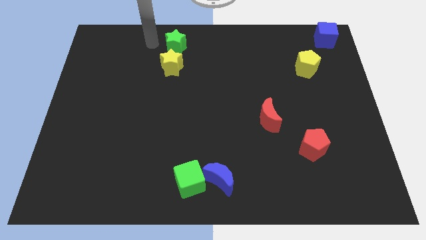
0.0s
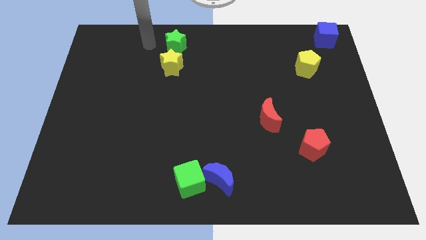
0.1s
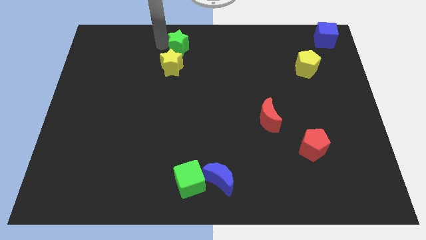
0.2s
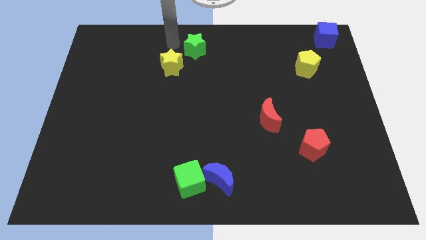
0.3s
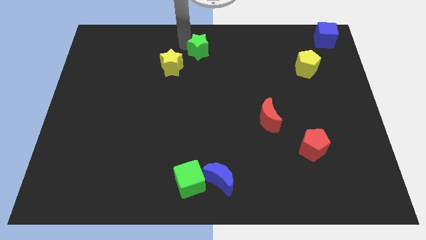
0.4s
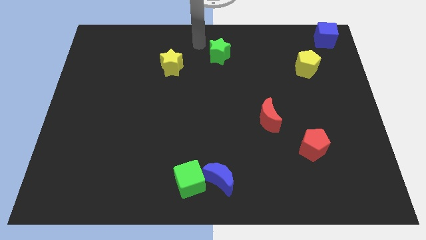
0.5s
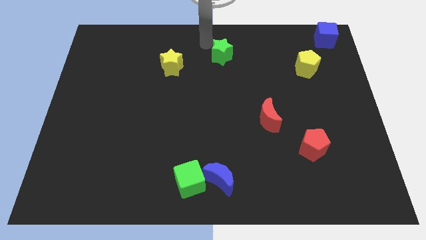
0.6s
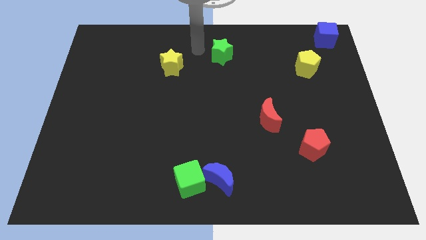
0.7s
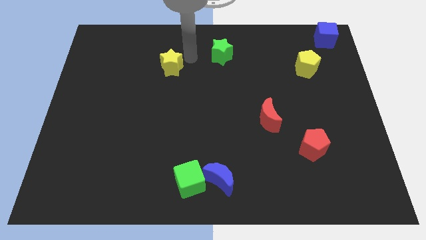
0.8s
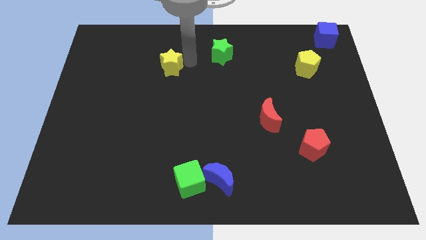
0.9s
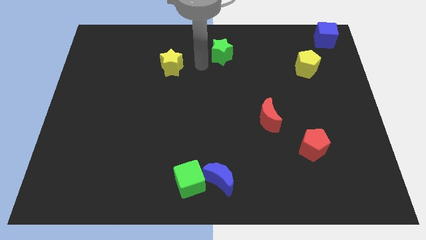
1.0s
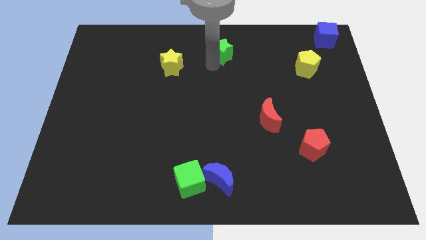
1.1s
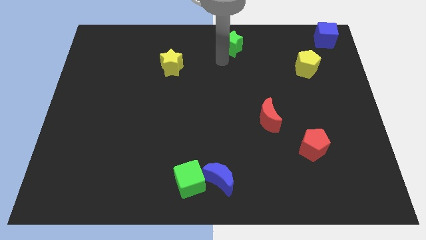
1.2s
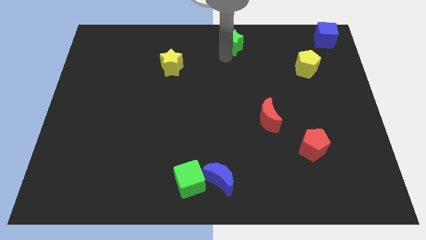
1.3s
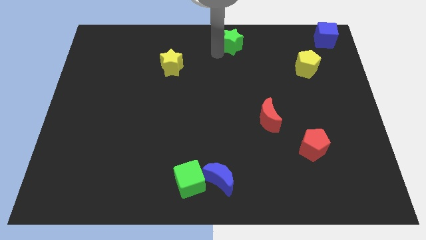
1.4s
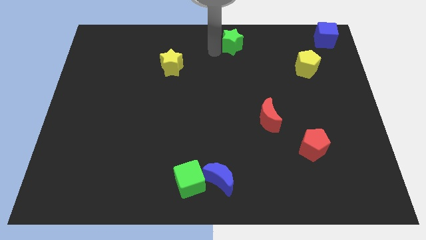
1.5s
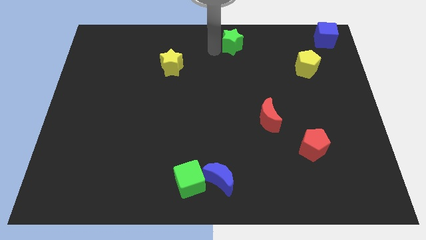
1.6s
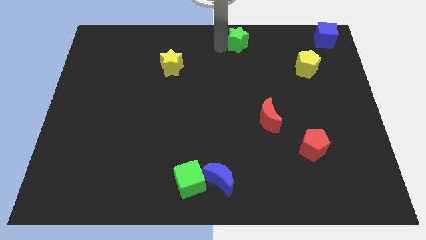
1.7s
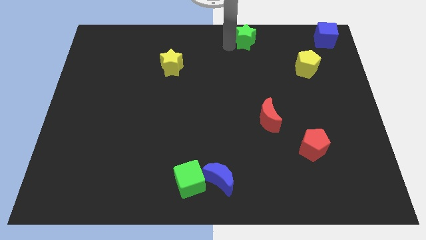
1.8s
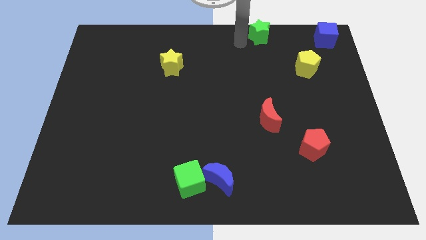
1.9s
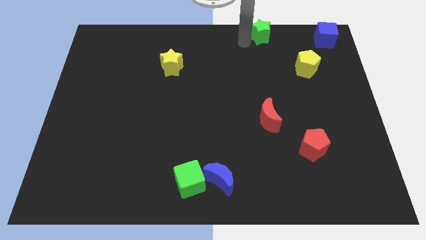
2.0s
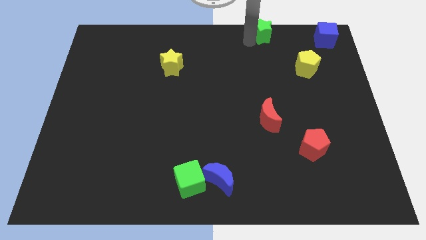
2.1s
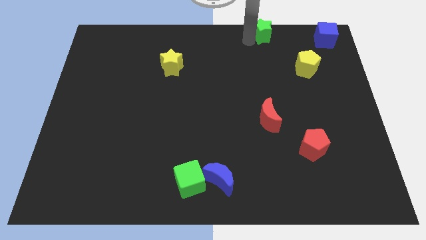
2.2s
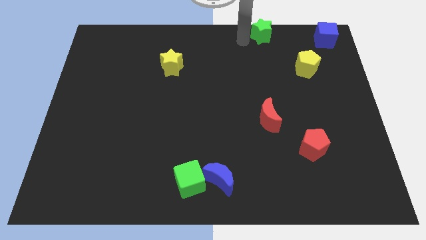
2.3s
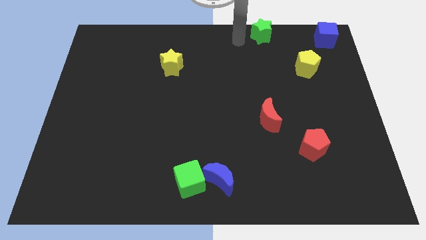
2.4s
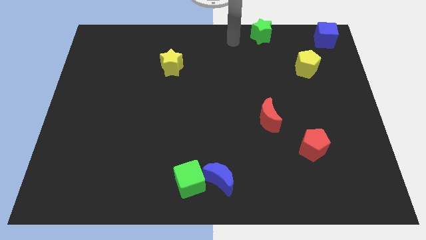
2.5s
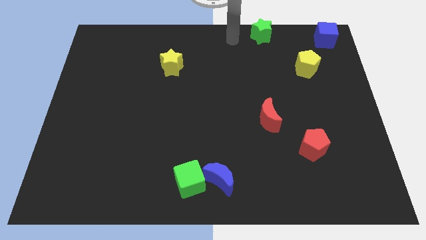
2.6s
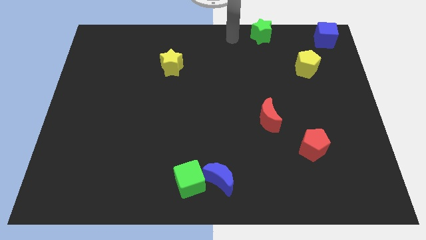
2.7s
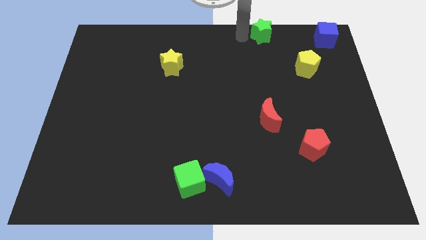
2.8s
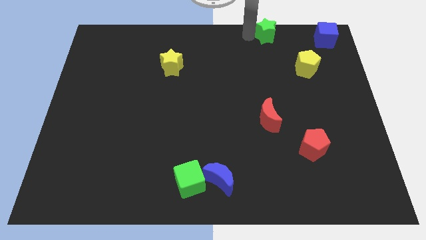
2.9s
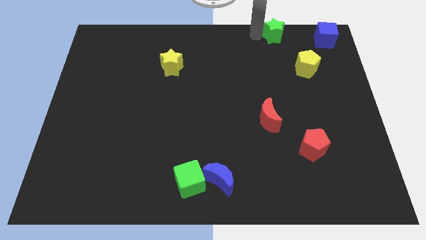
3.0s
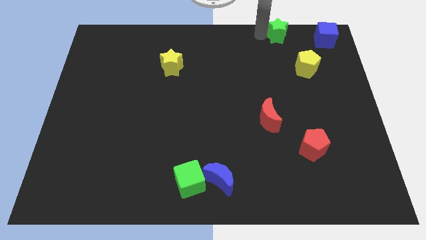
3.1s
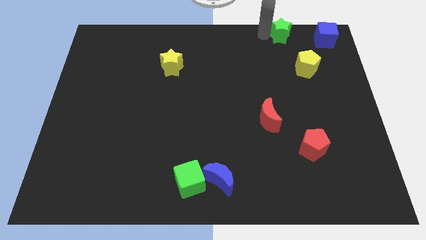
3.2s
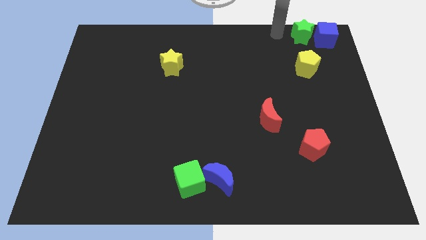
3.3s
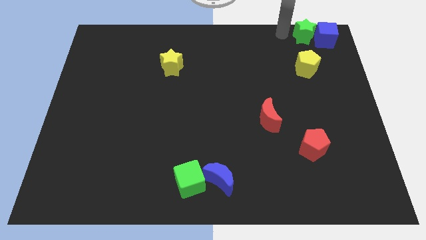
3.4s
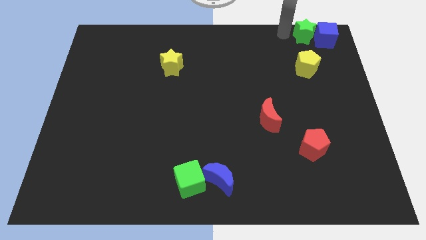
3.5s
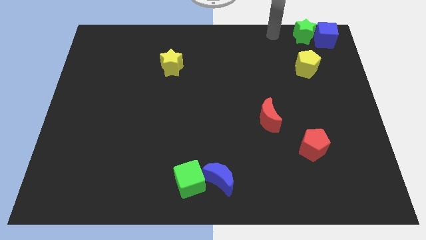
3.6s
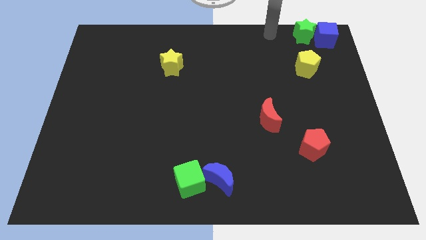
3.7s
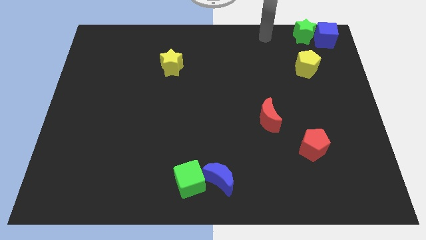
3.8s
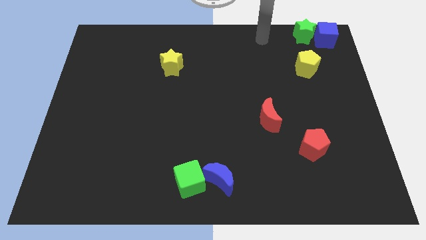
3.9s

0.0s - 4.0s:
move the green star left beside the blue cube

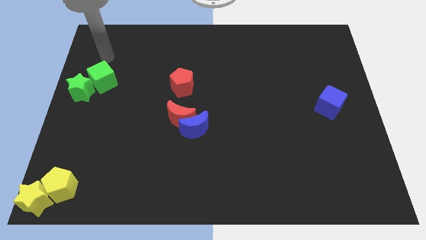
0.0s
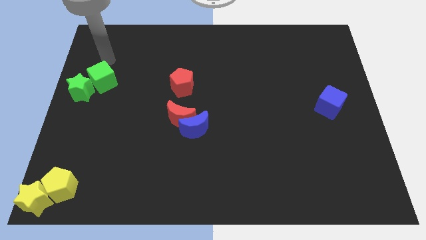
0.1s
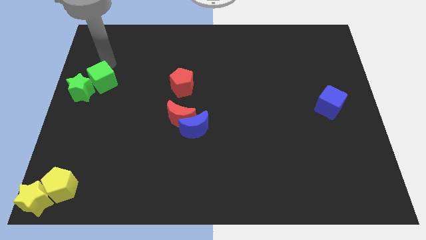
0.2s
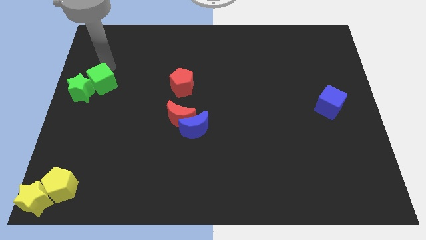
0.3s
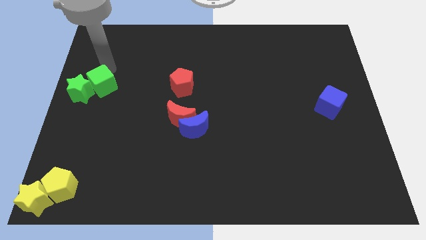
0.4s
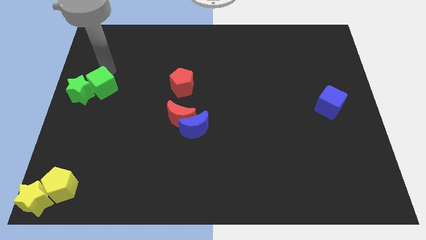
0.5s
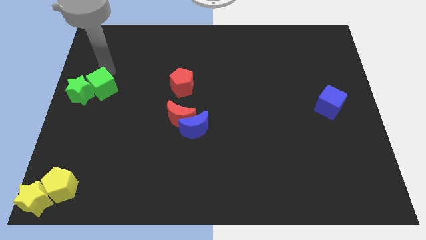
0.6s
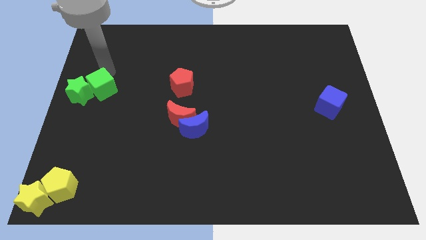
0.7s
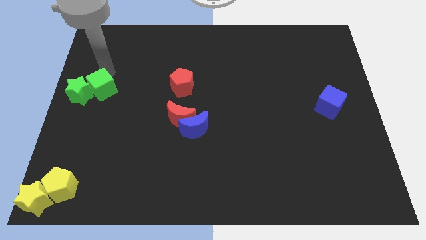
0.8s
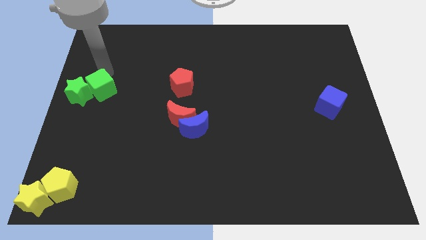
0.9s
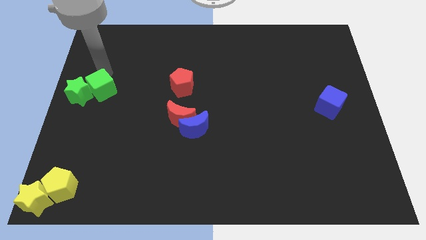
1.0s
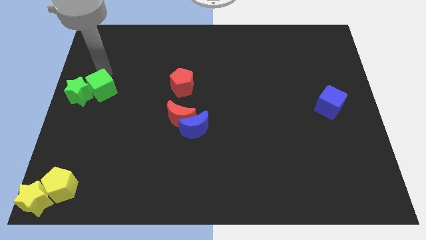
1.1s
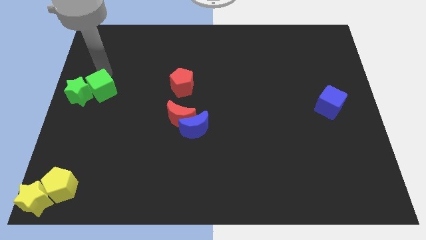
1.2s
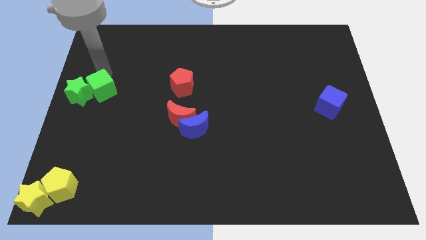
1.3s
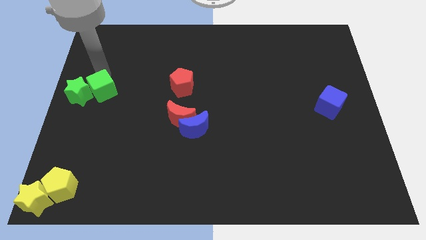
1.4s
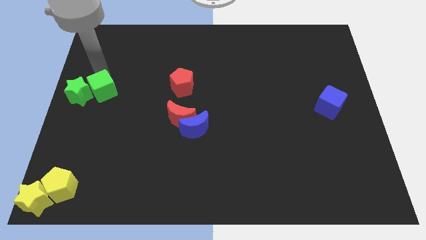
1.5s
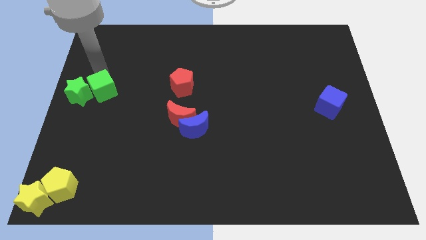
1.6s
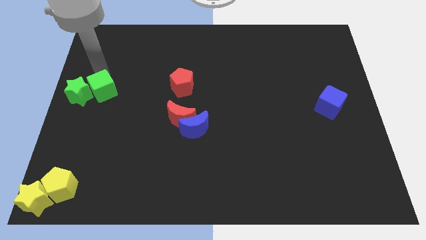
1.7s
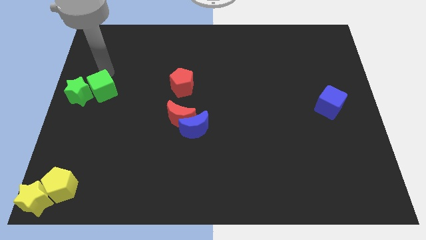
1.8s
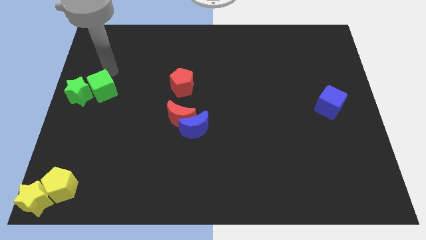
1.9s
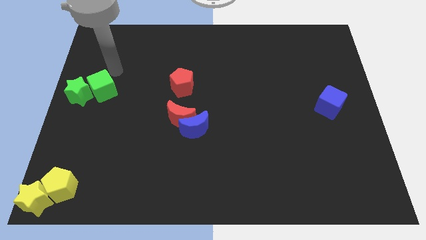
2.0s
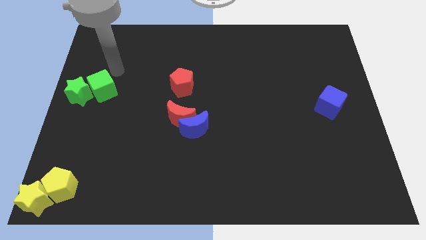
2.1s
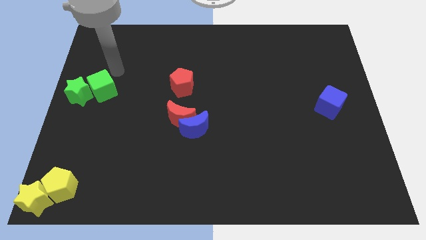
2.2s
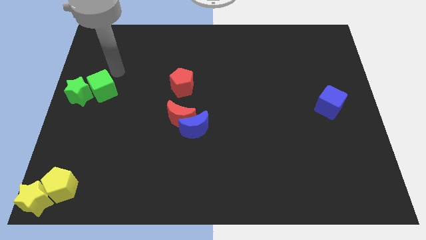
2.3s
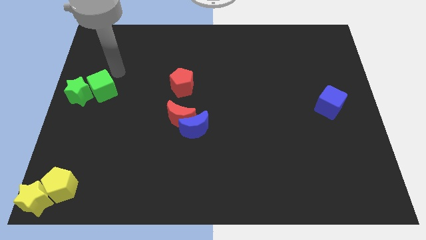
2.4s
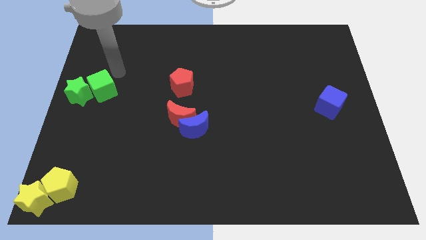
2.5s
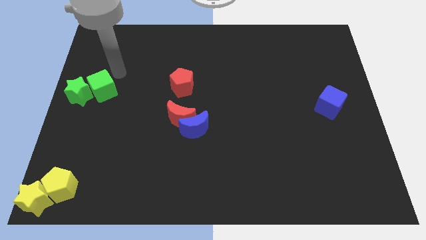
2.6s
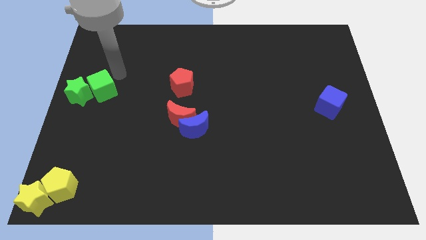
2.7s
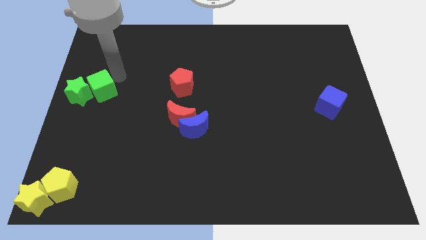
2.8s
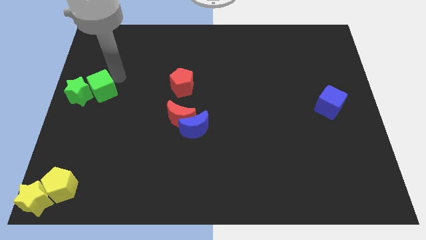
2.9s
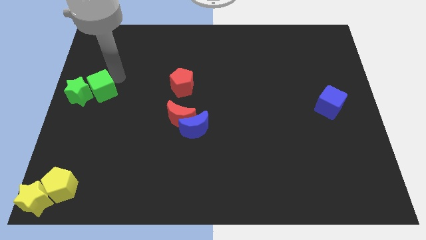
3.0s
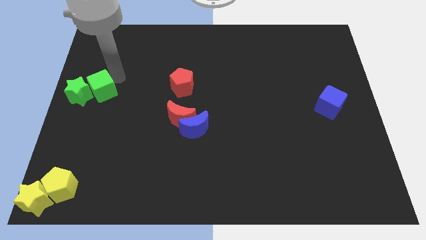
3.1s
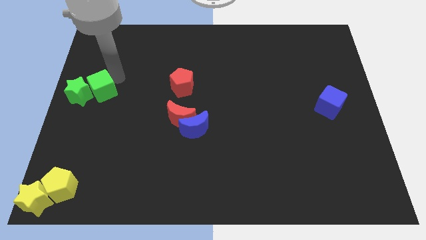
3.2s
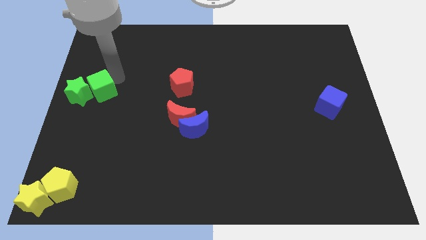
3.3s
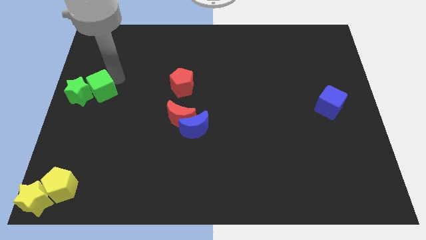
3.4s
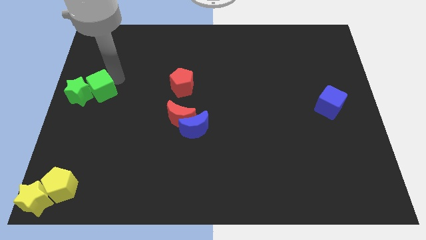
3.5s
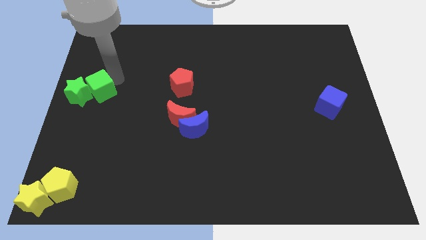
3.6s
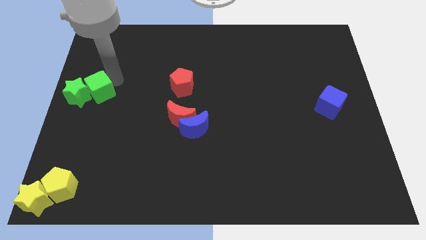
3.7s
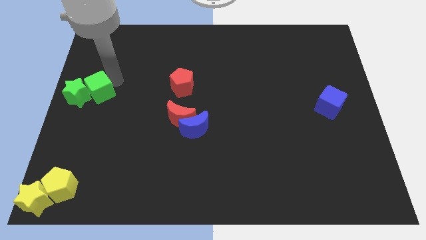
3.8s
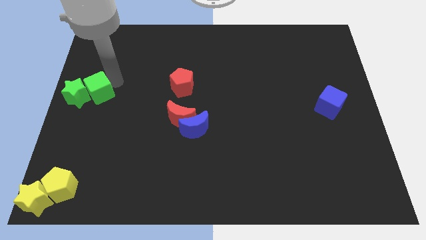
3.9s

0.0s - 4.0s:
move the green cube along with green star to the left center of the board

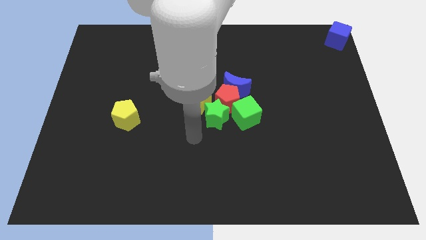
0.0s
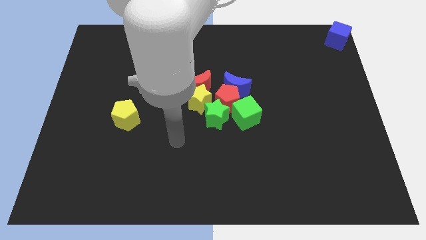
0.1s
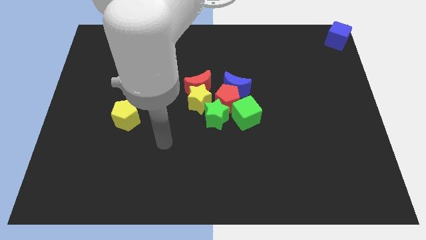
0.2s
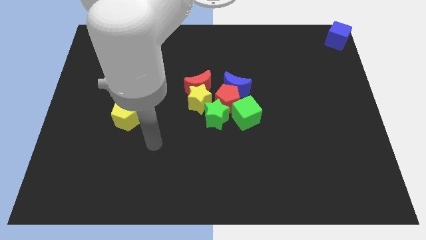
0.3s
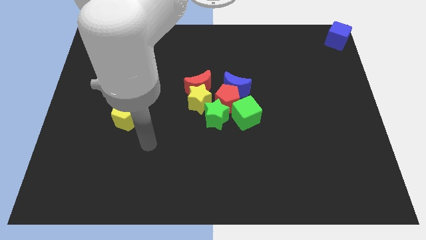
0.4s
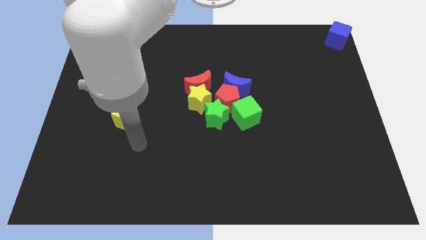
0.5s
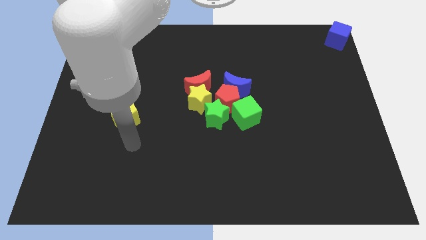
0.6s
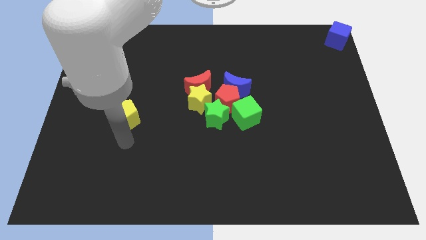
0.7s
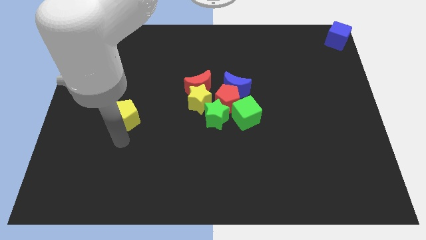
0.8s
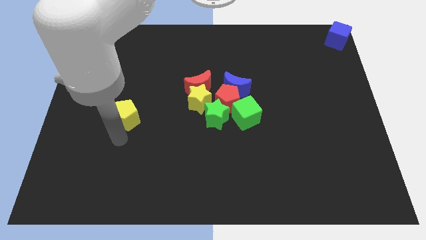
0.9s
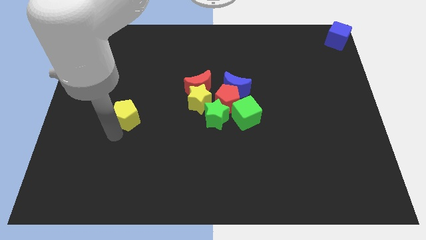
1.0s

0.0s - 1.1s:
point your arm at the bottom side of the yellow pentagon

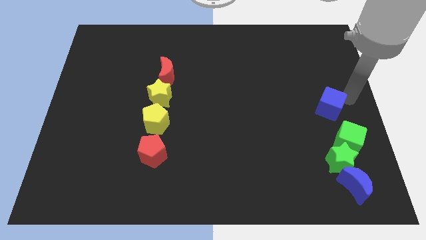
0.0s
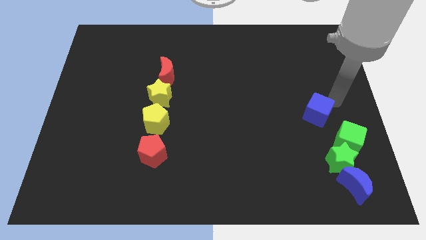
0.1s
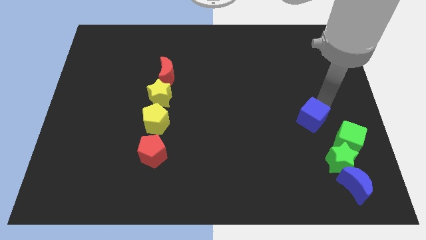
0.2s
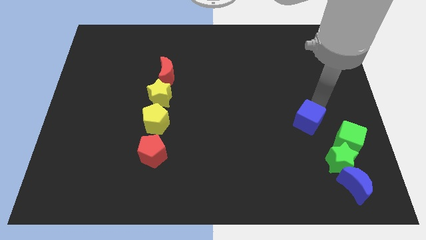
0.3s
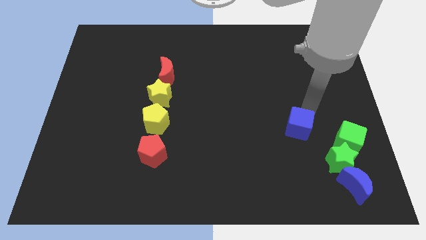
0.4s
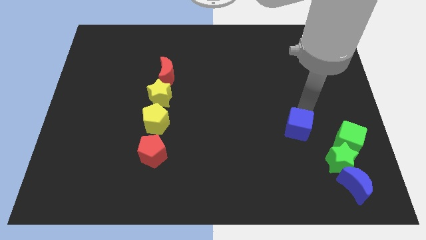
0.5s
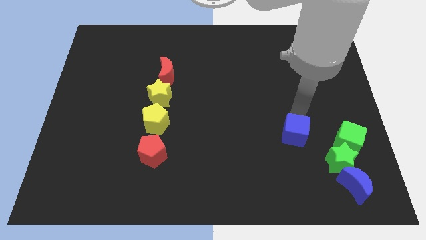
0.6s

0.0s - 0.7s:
push the blue cube diagonally left to the green cube
